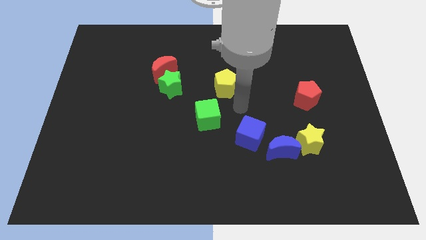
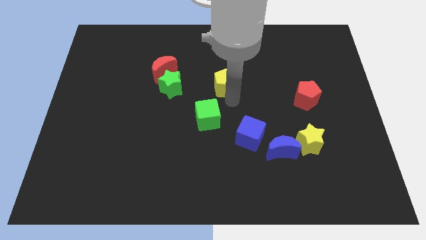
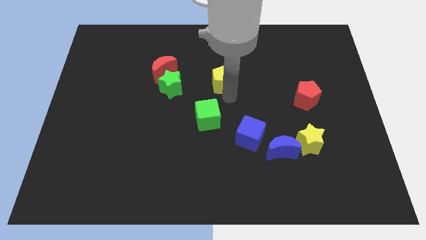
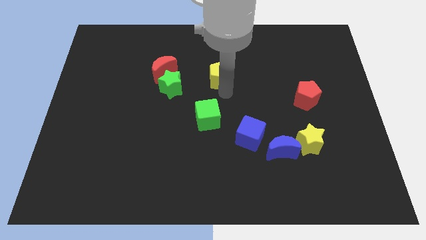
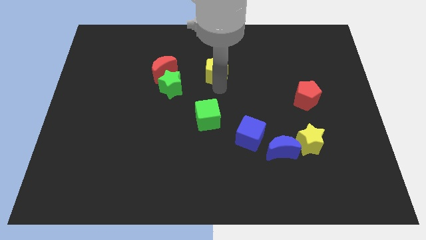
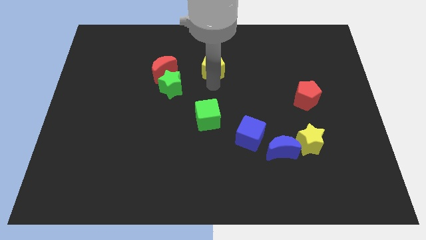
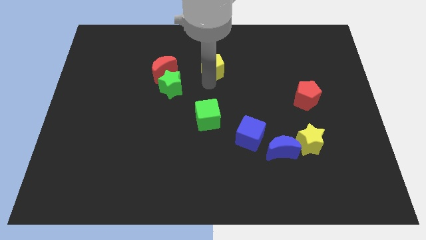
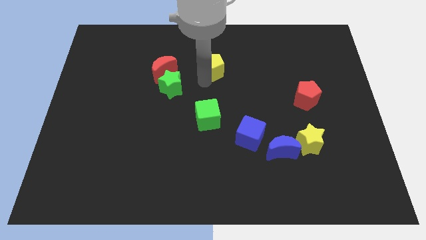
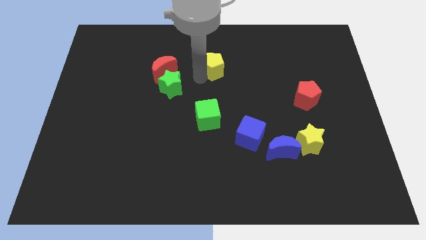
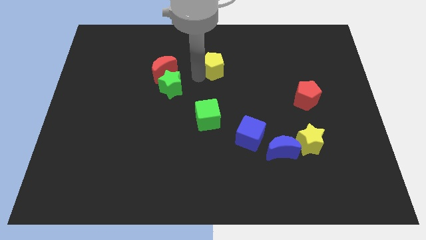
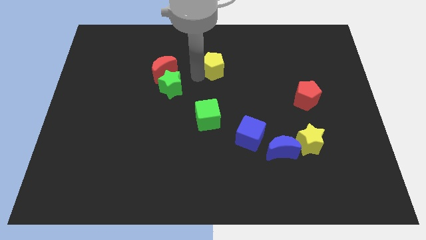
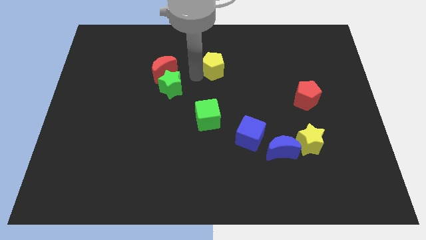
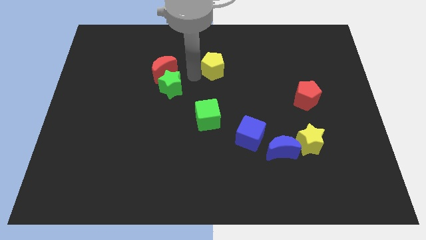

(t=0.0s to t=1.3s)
move the yellow pentagon slightly to the top of the board

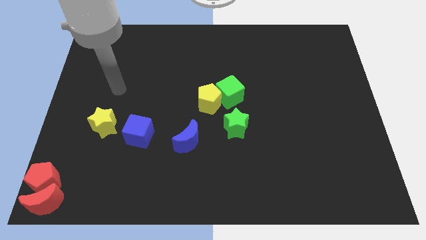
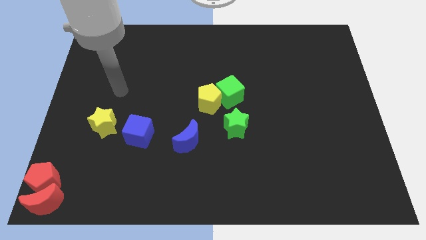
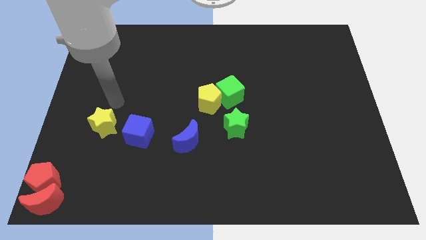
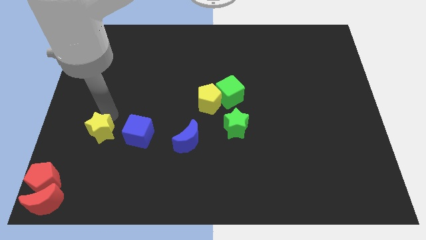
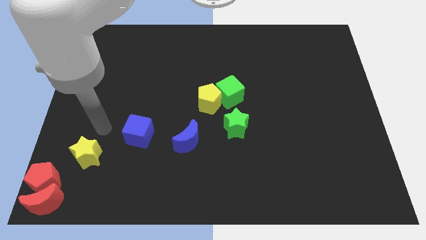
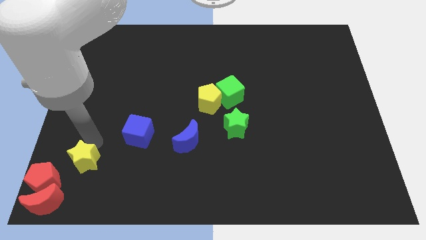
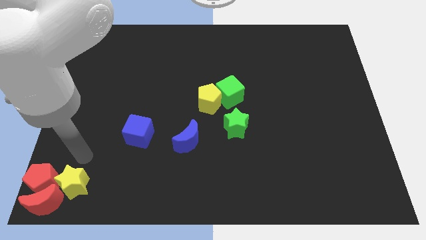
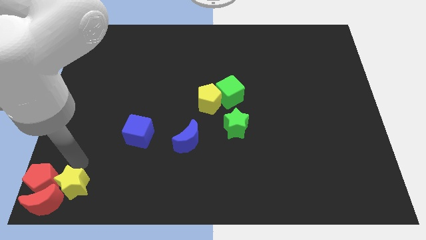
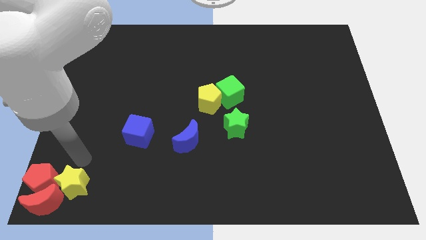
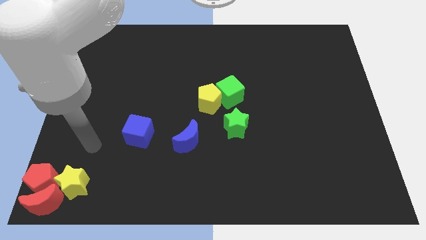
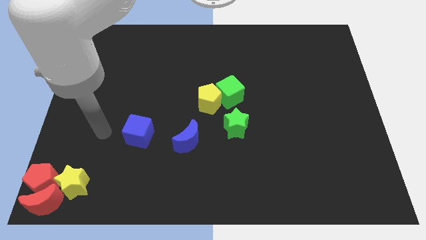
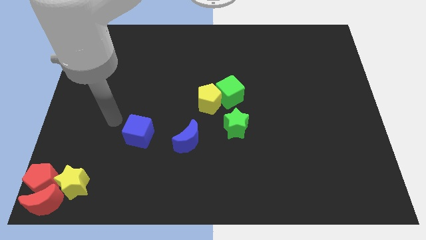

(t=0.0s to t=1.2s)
place the yellow star right to the red moon

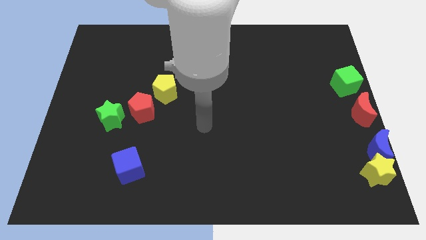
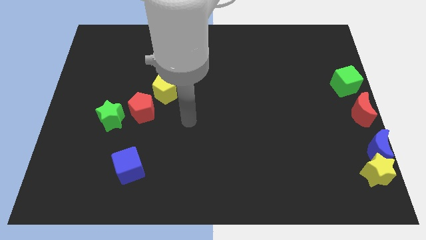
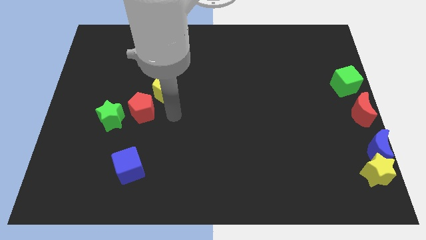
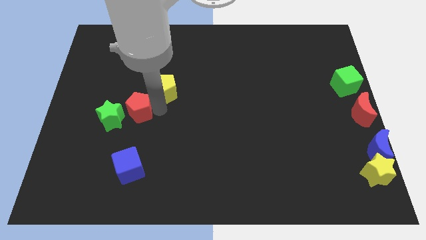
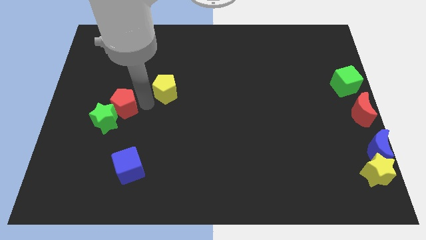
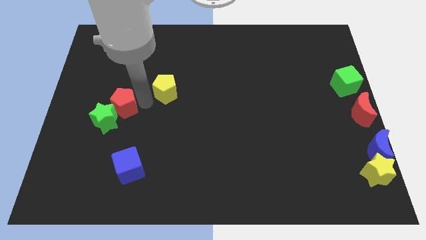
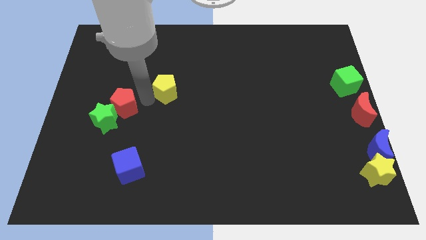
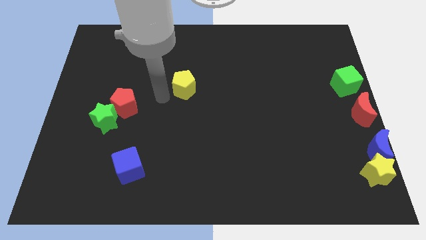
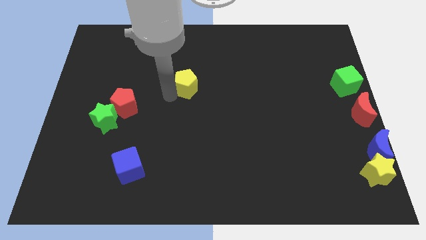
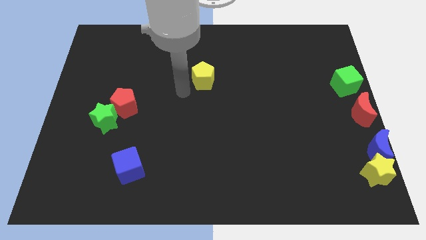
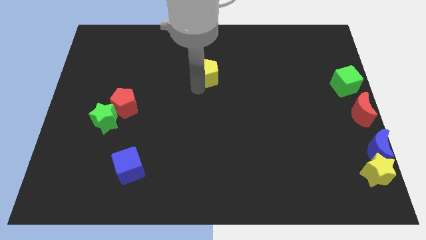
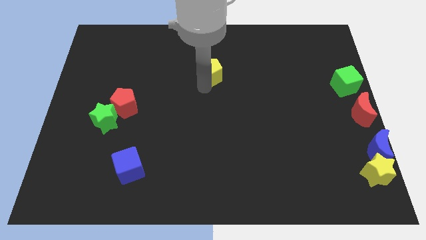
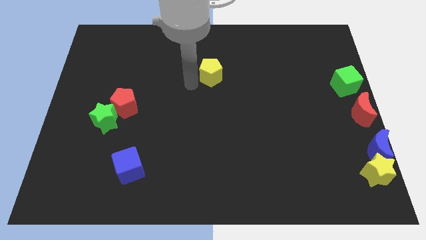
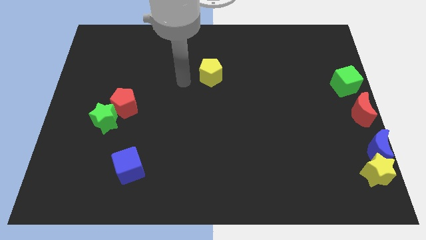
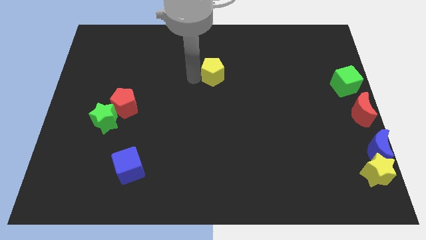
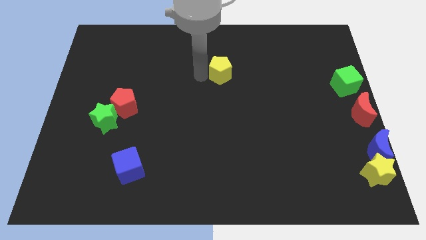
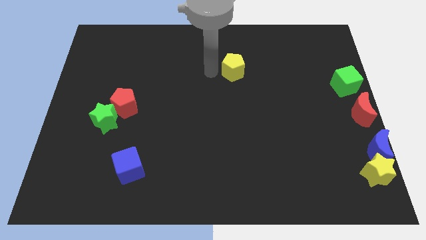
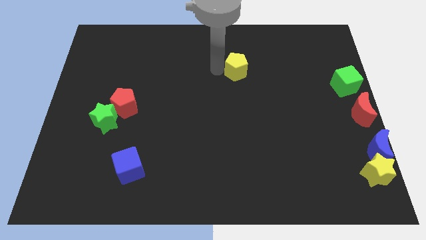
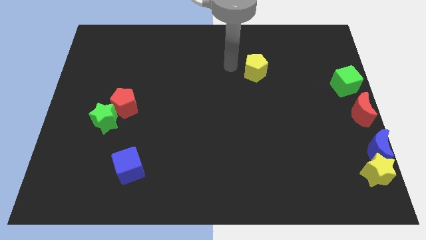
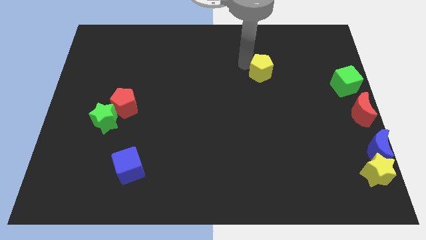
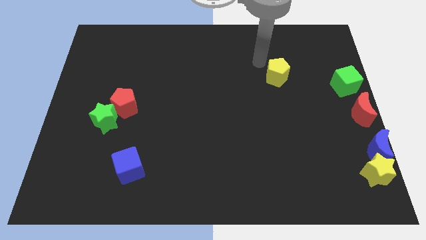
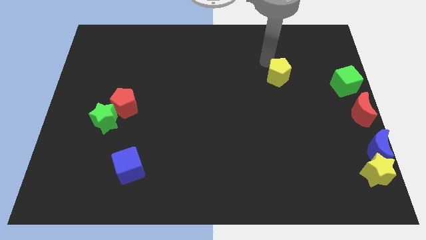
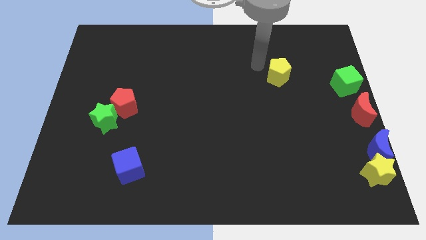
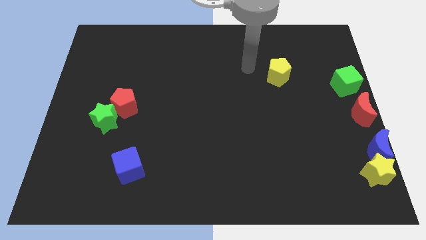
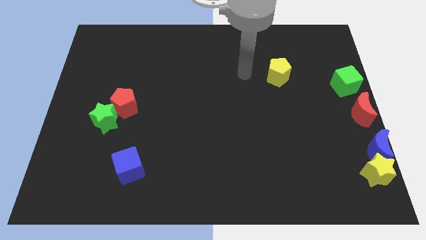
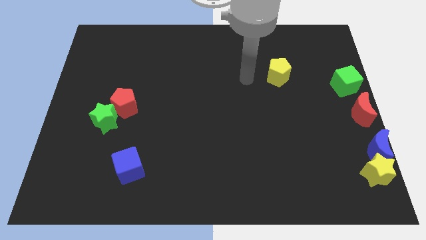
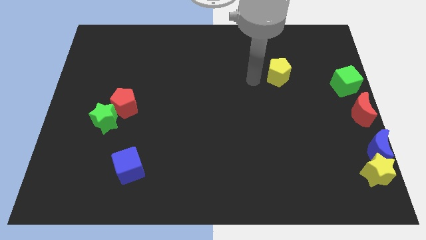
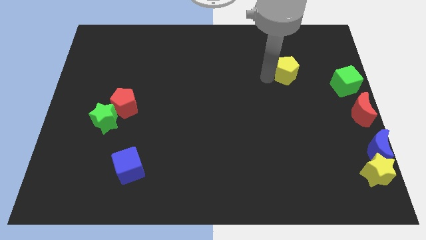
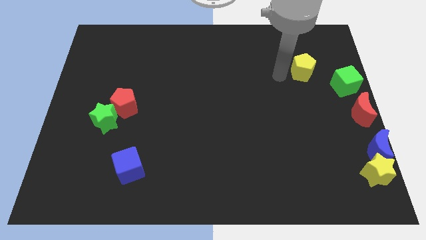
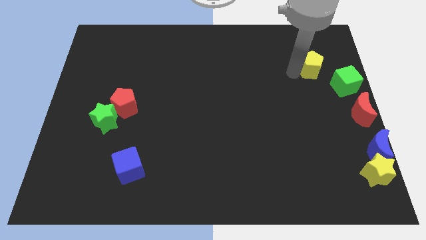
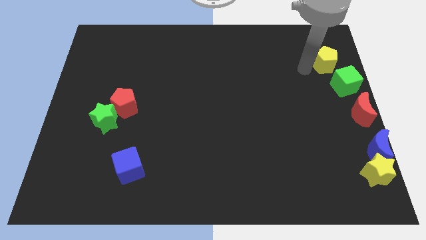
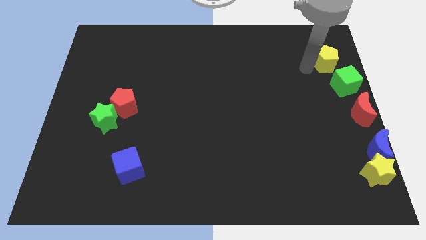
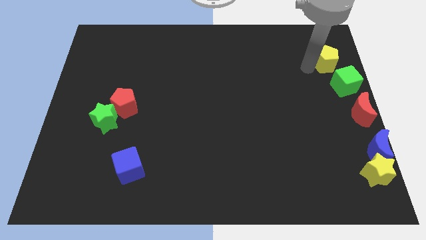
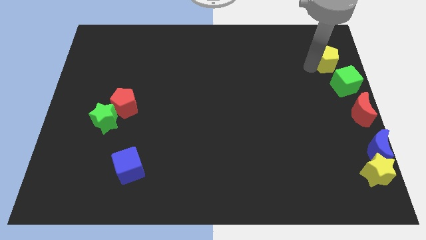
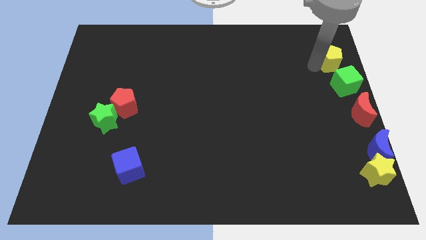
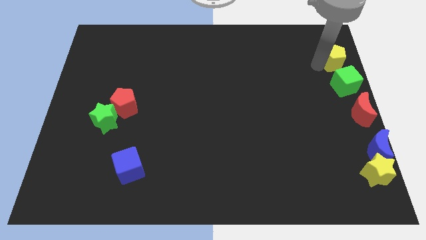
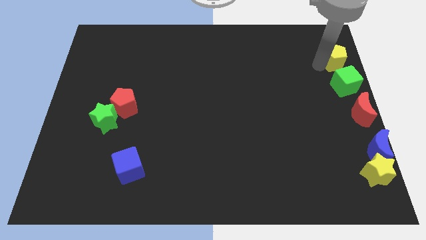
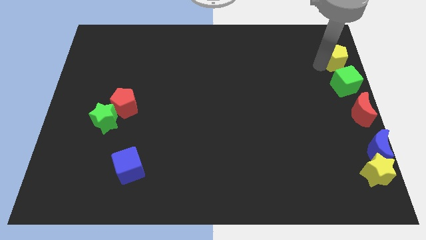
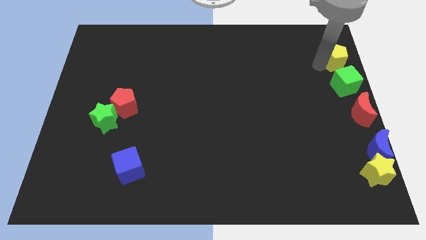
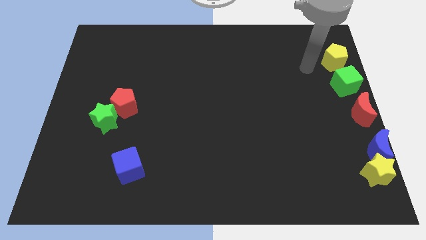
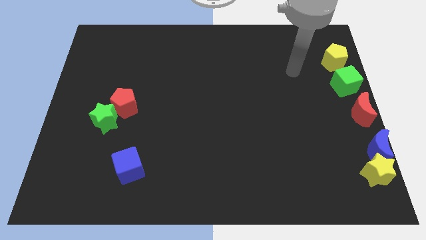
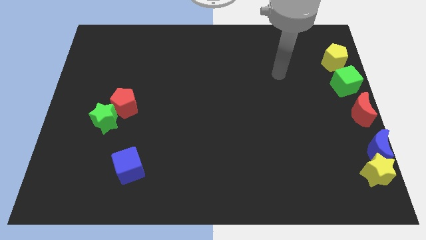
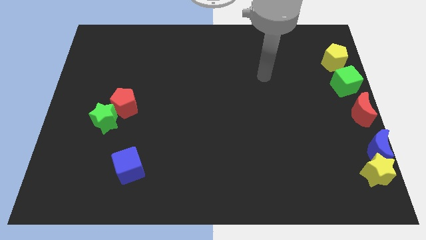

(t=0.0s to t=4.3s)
push the yellow pentagon to the top side of the green cube

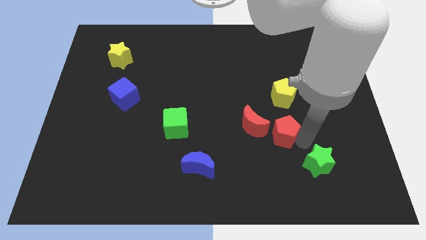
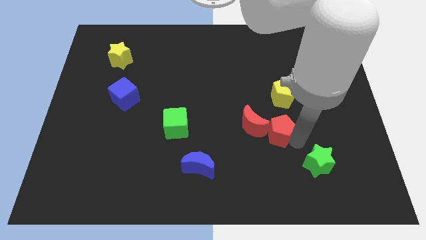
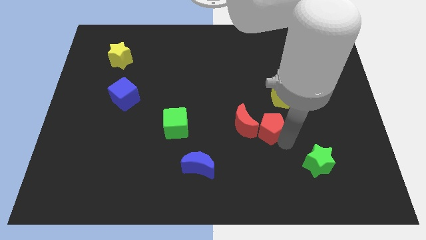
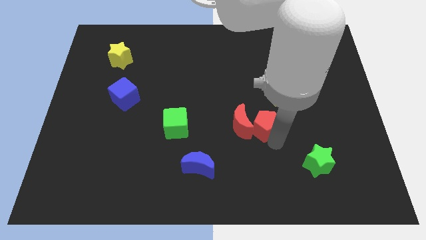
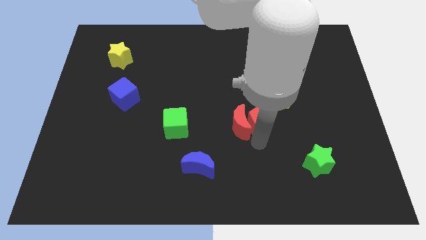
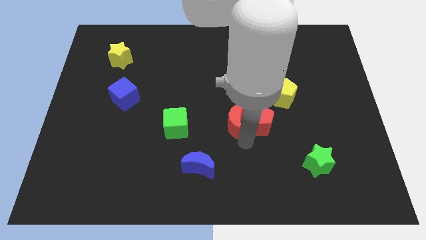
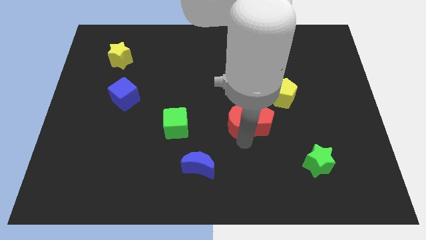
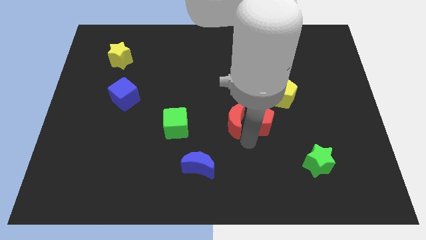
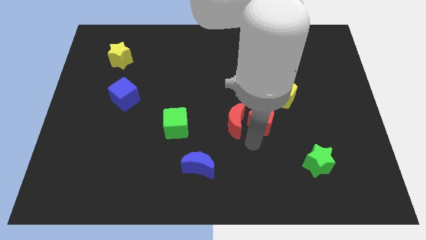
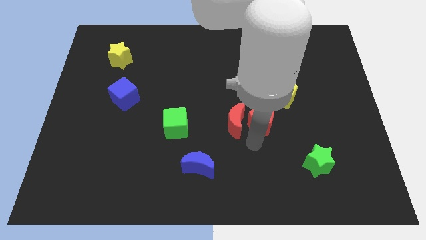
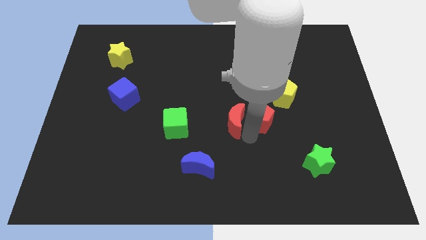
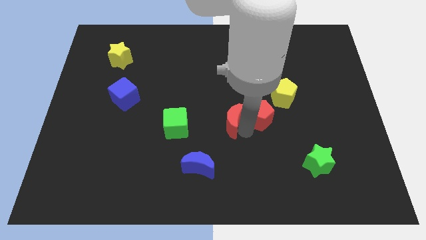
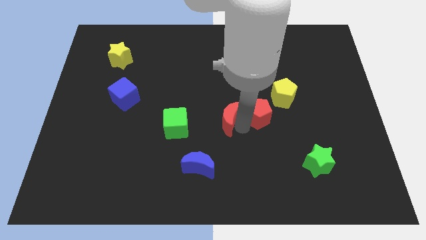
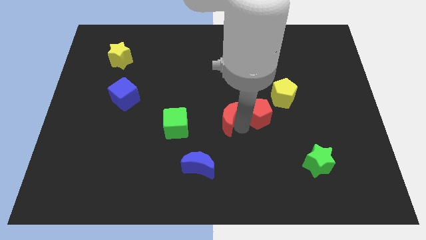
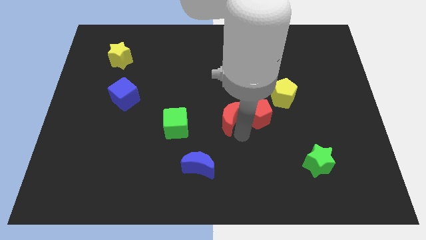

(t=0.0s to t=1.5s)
reposition two red objects

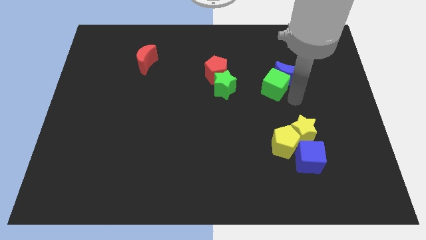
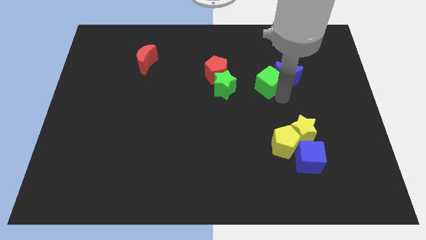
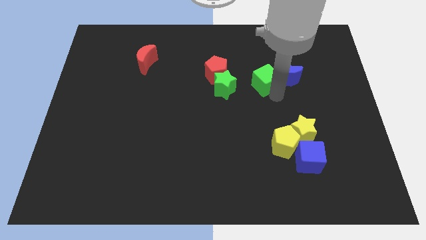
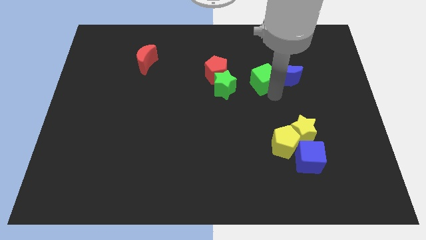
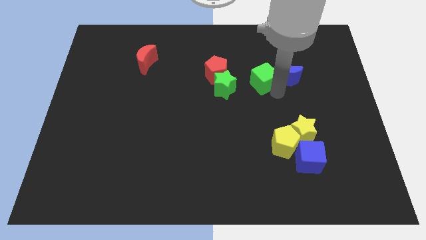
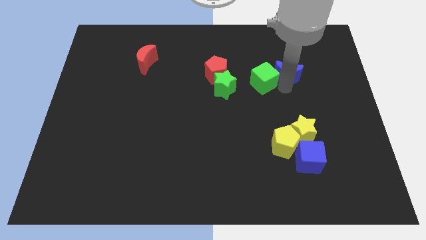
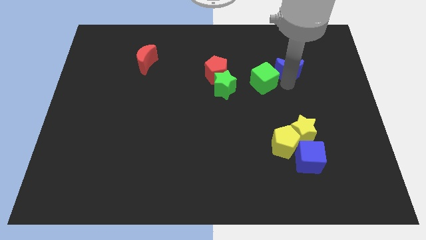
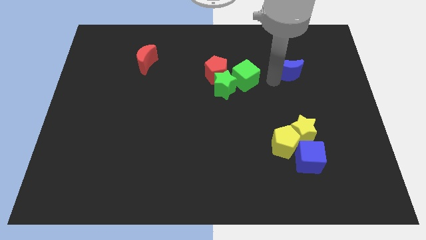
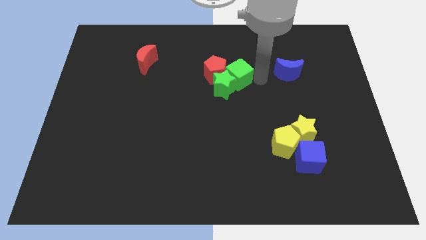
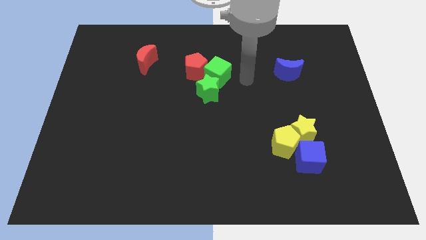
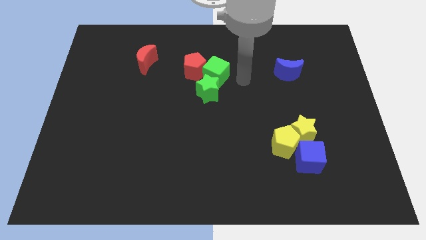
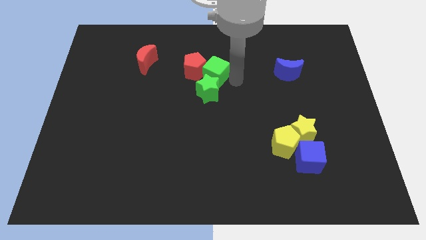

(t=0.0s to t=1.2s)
push the green cube into the green star
